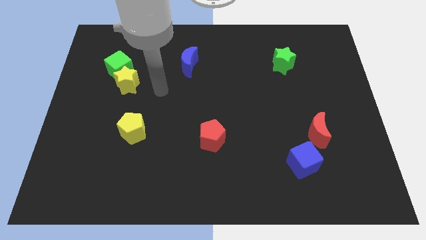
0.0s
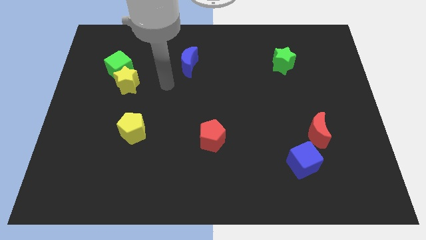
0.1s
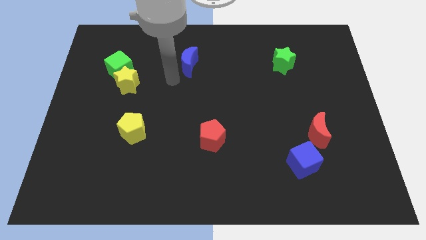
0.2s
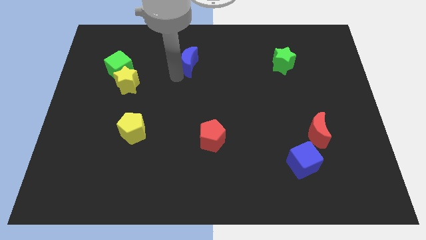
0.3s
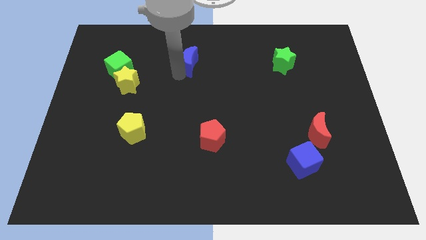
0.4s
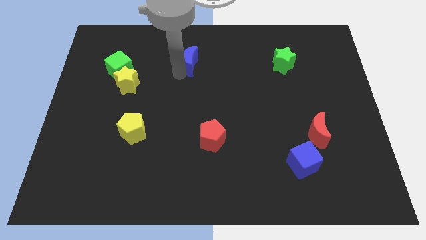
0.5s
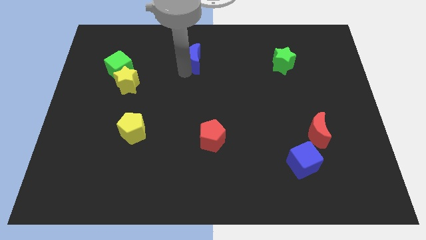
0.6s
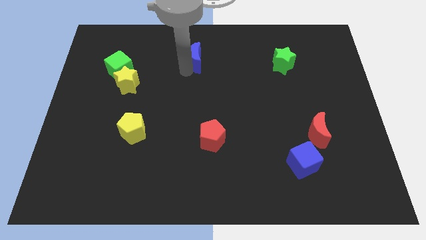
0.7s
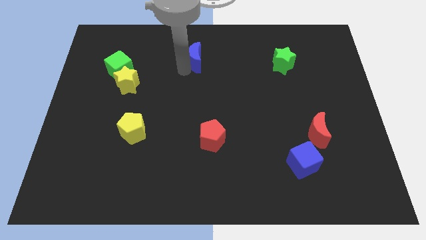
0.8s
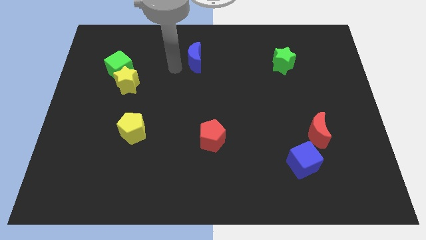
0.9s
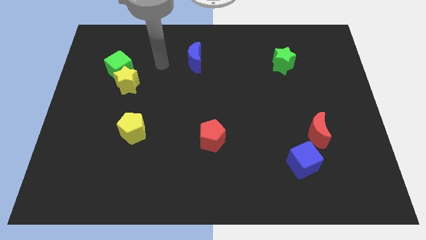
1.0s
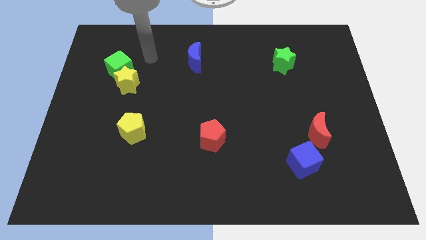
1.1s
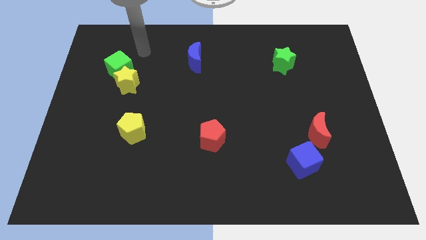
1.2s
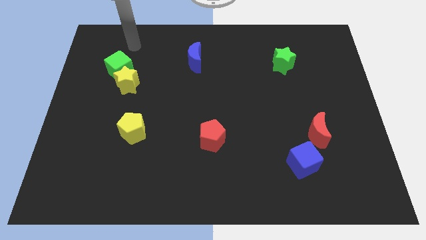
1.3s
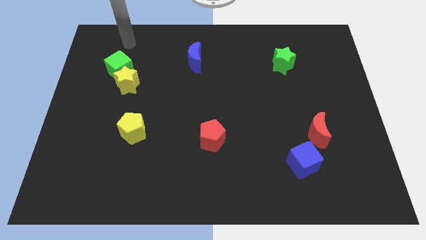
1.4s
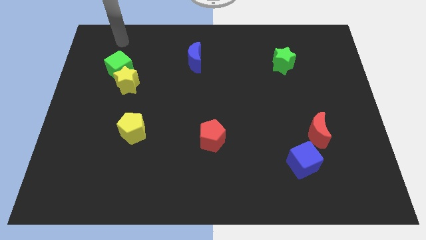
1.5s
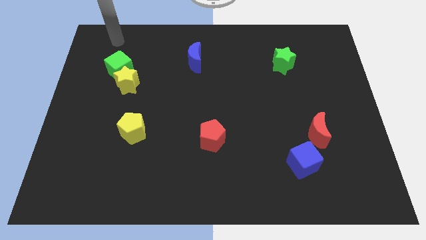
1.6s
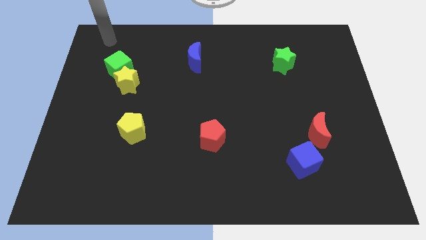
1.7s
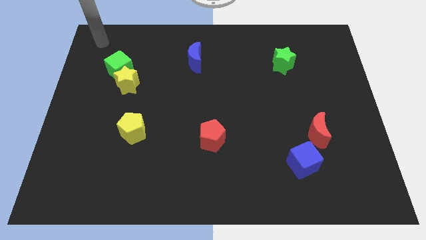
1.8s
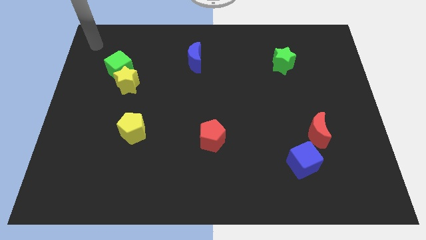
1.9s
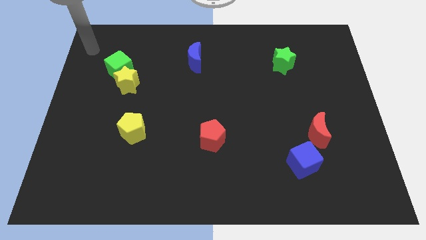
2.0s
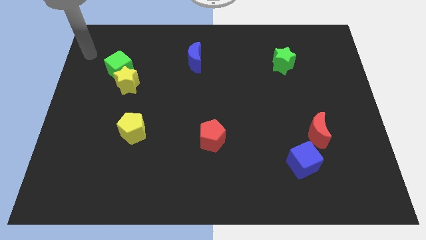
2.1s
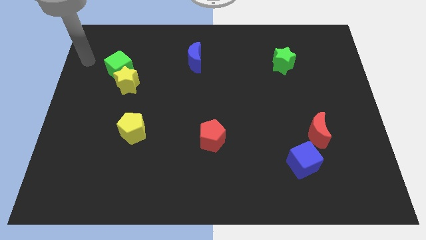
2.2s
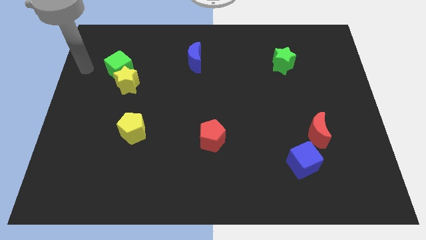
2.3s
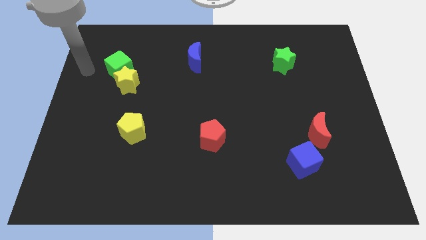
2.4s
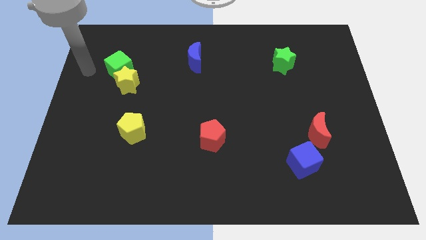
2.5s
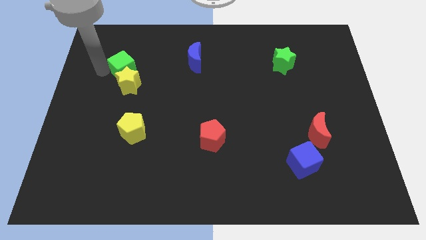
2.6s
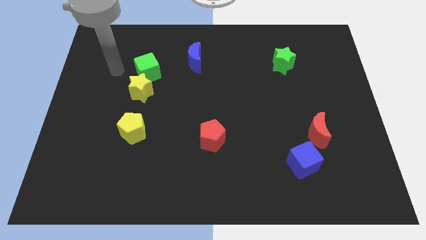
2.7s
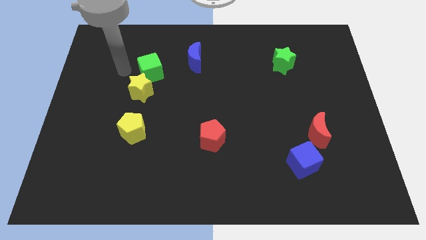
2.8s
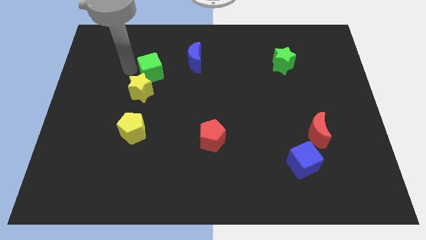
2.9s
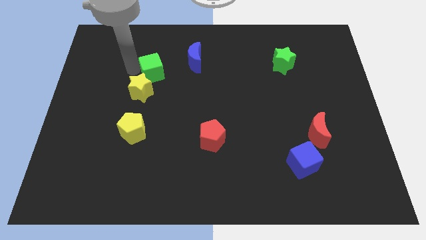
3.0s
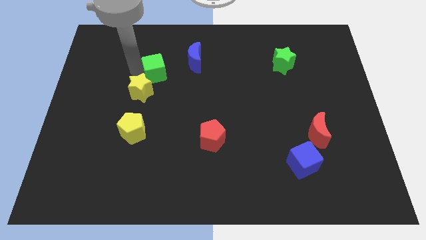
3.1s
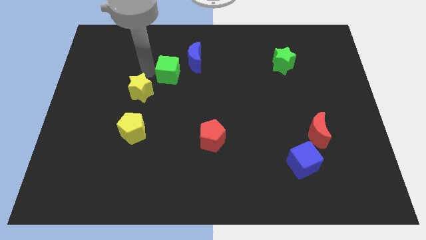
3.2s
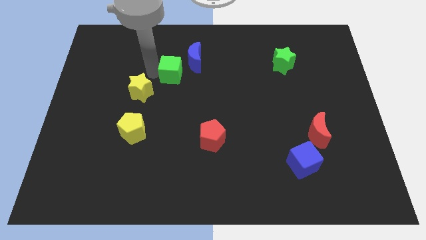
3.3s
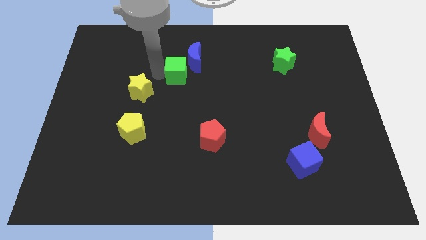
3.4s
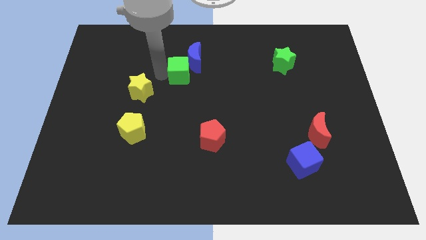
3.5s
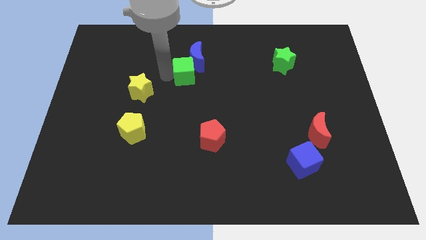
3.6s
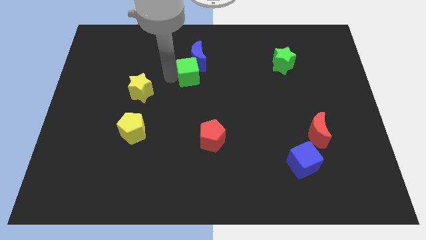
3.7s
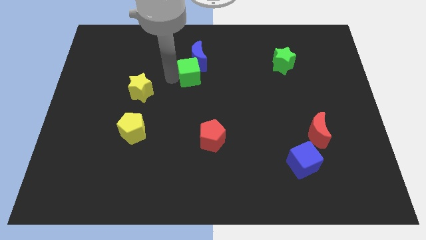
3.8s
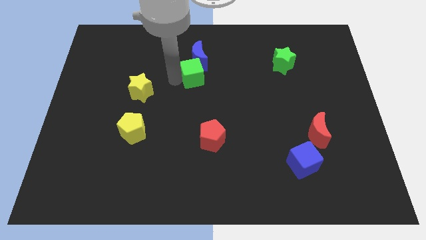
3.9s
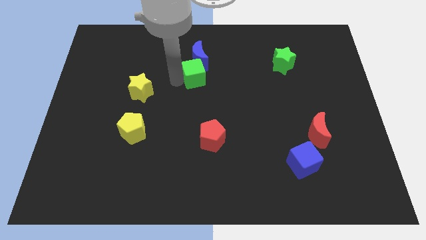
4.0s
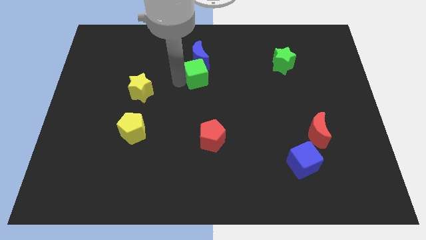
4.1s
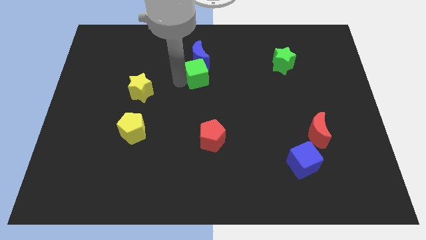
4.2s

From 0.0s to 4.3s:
move the green cube below the blue moon

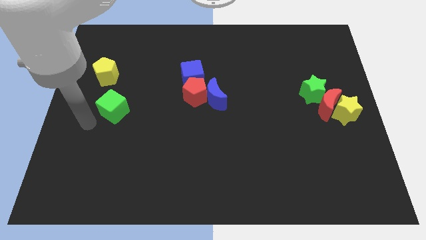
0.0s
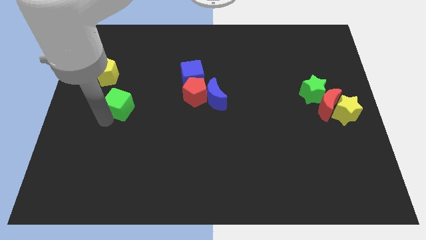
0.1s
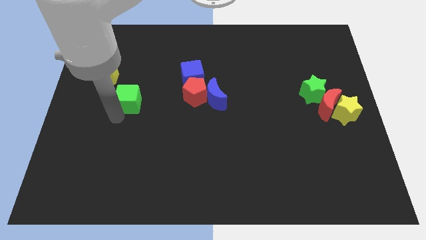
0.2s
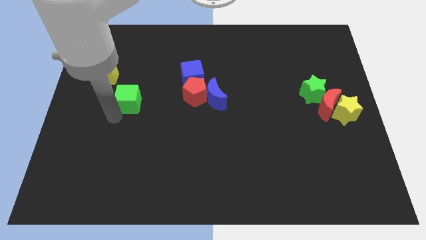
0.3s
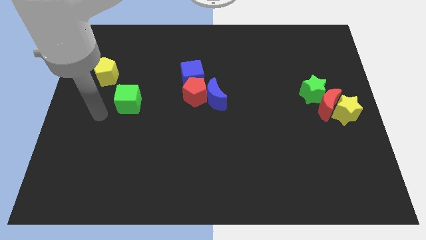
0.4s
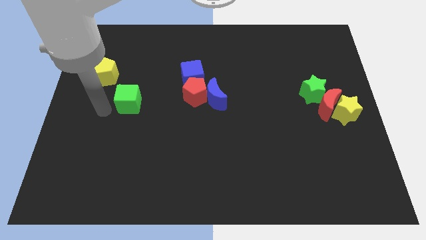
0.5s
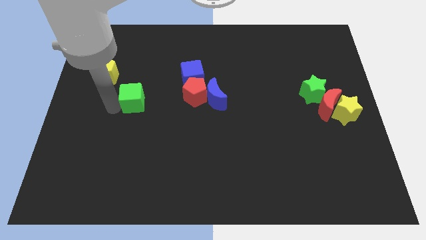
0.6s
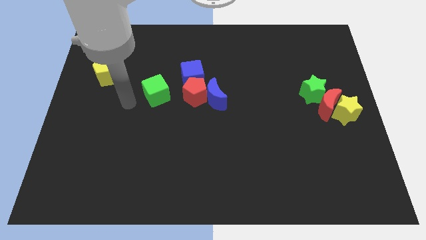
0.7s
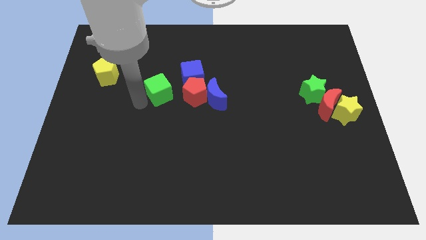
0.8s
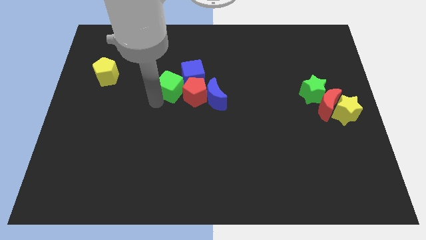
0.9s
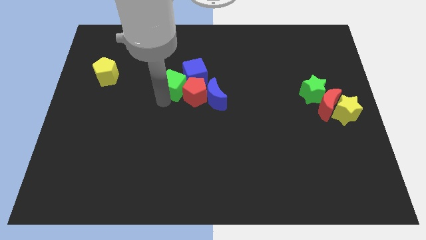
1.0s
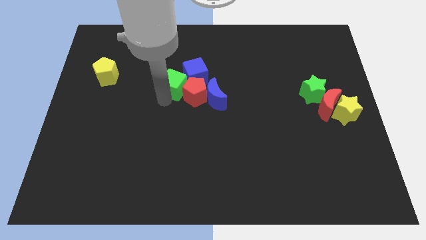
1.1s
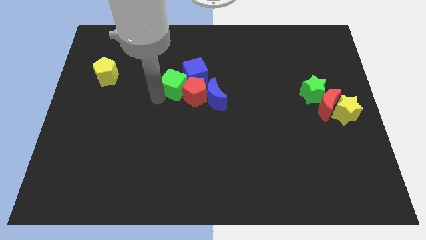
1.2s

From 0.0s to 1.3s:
place green cube near blue cube

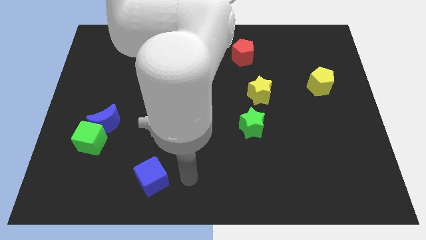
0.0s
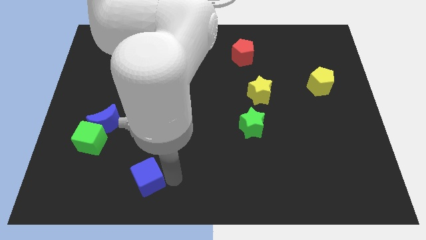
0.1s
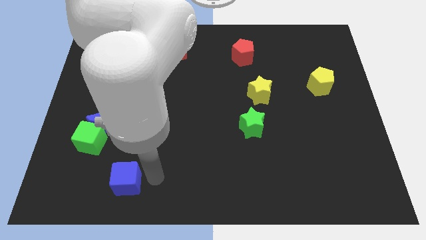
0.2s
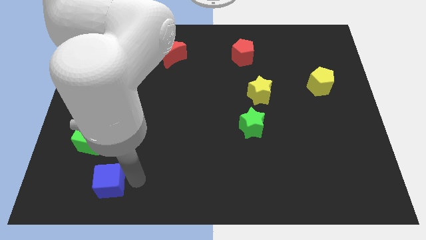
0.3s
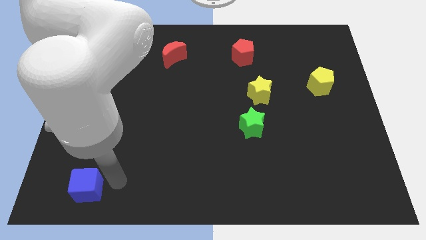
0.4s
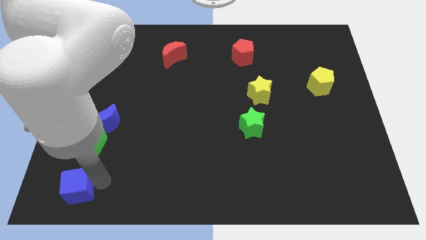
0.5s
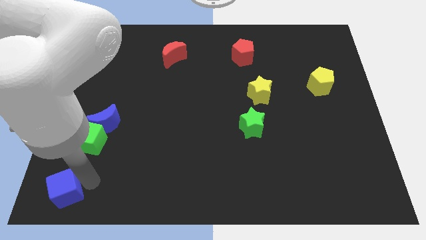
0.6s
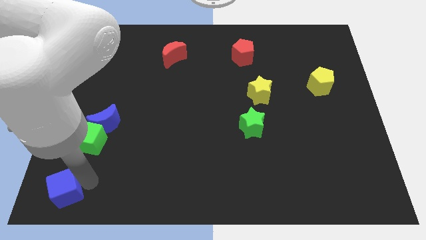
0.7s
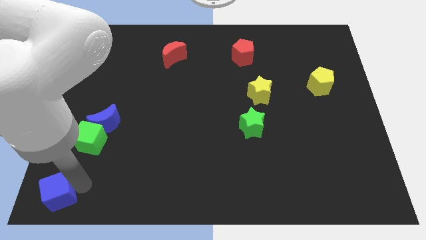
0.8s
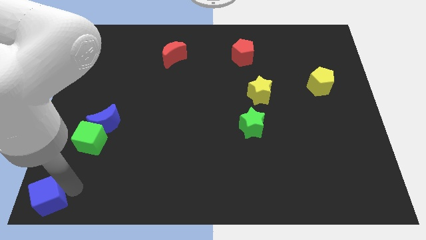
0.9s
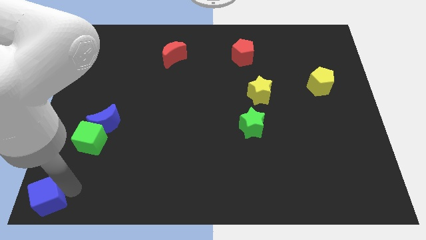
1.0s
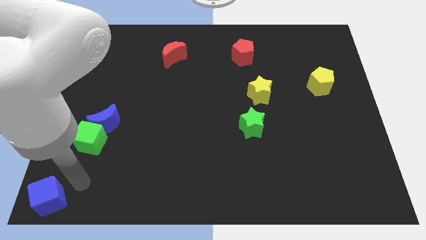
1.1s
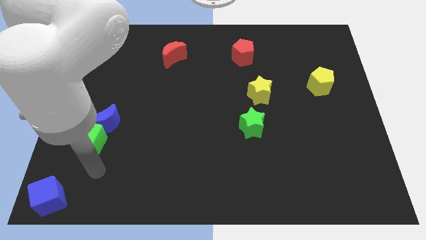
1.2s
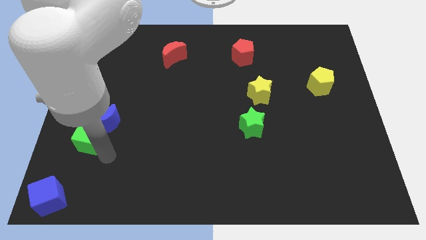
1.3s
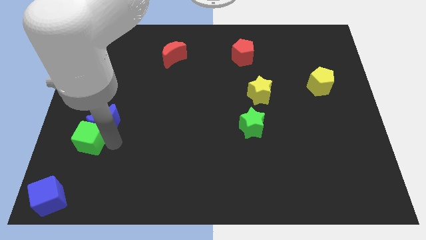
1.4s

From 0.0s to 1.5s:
push the blue cube towards the bottom left corner

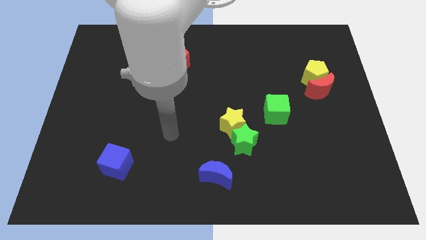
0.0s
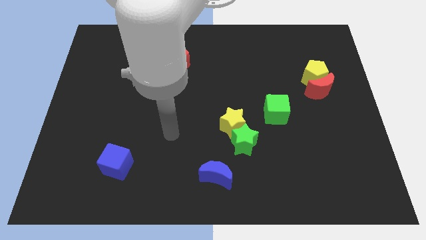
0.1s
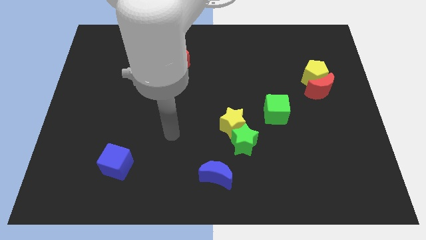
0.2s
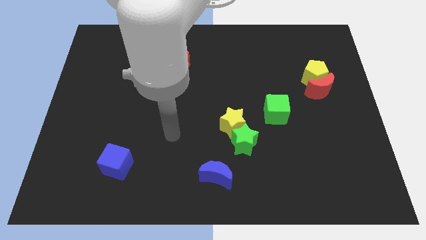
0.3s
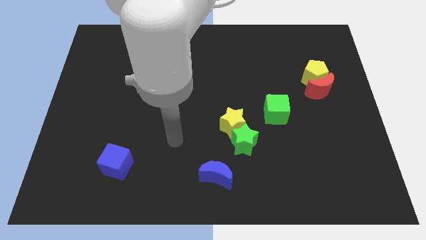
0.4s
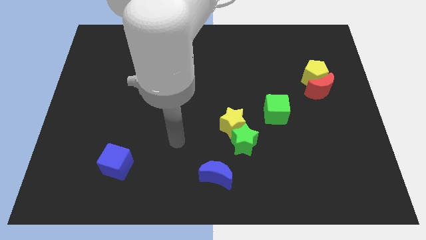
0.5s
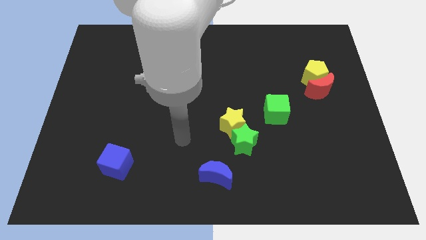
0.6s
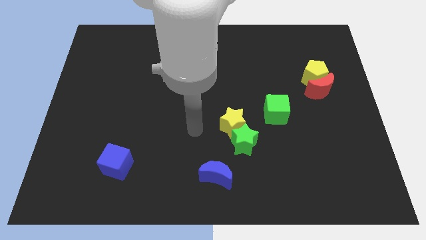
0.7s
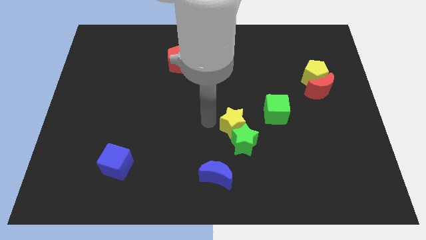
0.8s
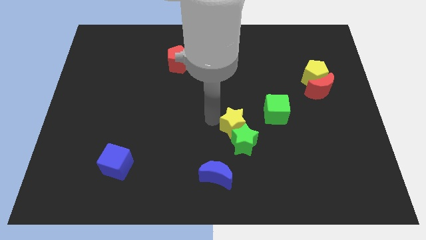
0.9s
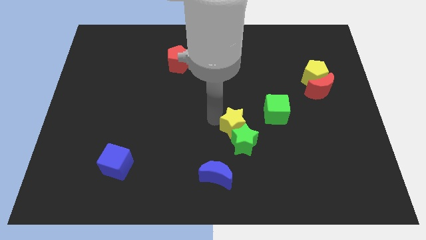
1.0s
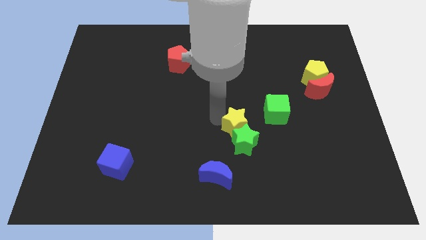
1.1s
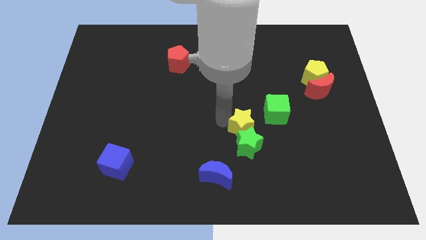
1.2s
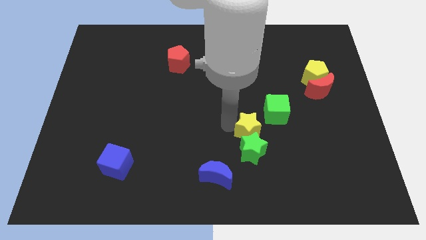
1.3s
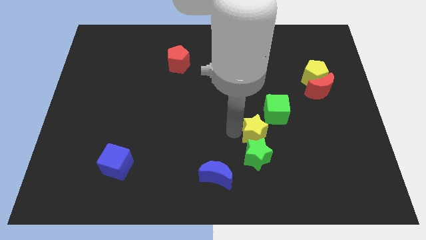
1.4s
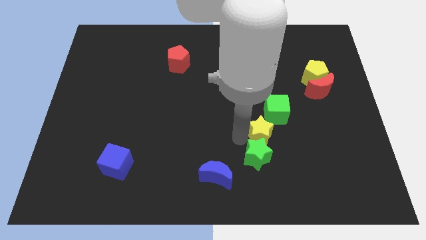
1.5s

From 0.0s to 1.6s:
push the yellow star to the top of the green star

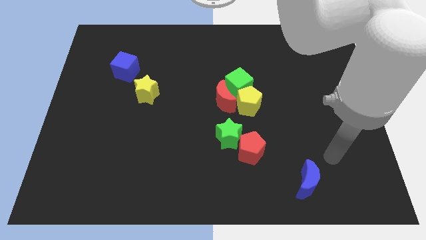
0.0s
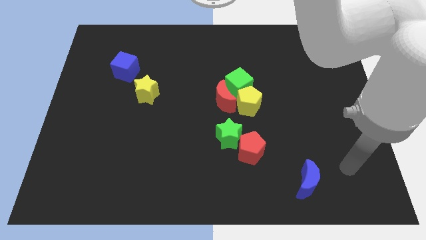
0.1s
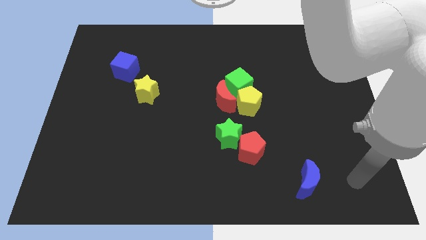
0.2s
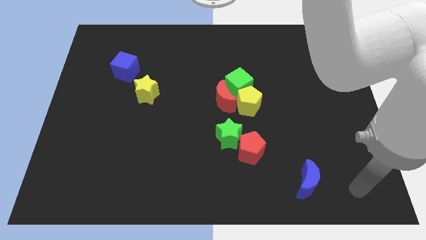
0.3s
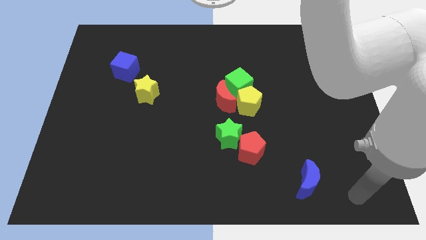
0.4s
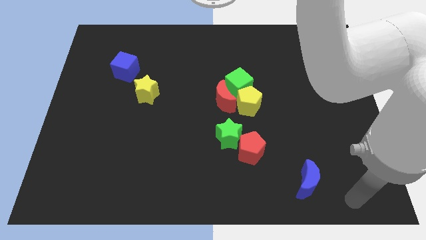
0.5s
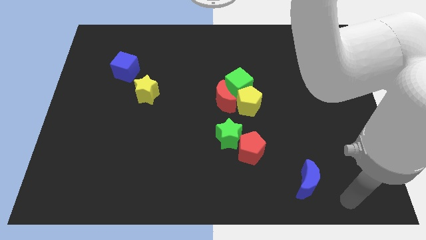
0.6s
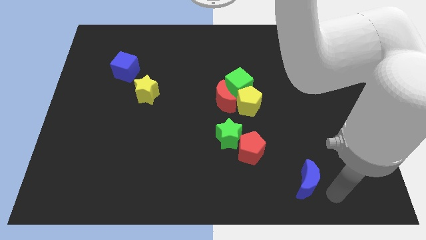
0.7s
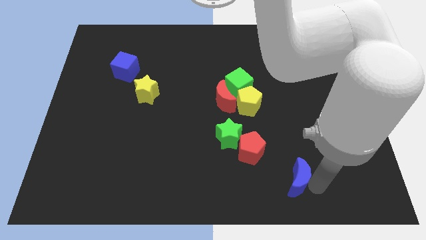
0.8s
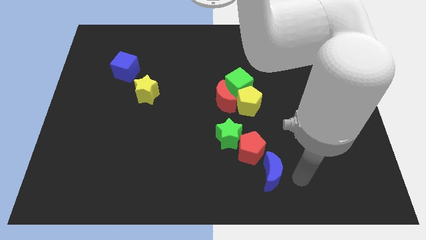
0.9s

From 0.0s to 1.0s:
place blue moon to the bottom right of the red pentagon
